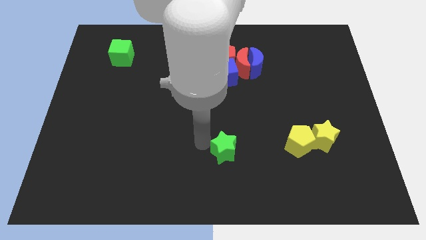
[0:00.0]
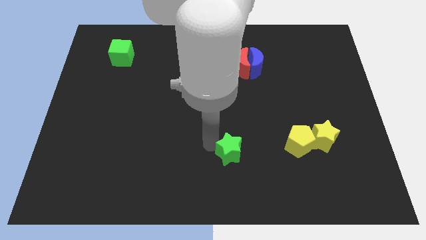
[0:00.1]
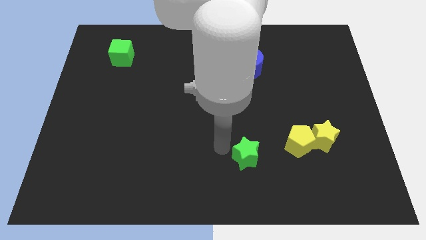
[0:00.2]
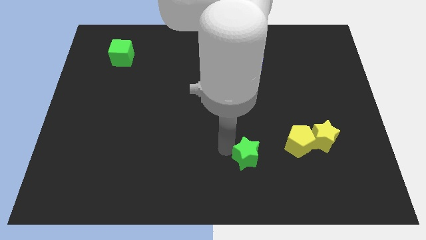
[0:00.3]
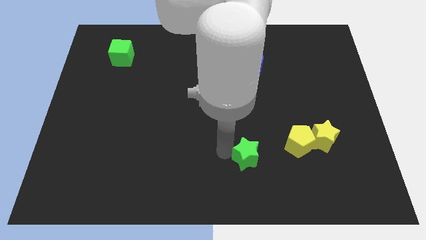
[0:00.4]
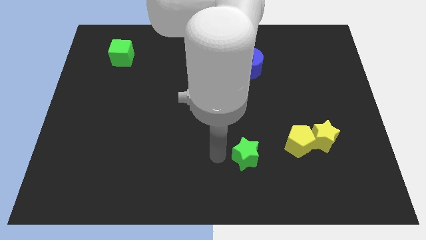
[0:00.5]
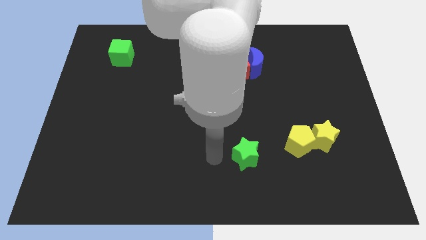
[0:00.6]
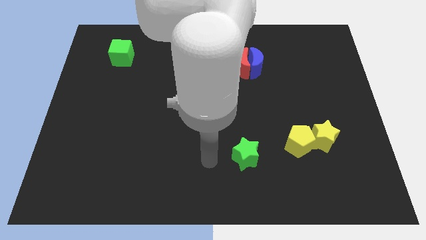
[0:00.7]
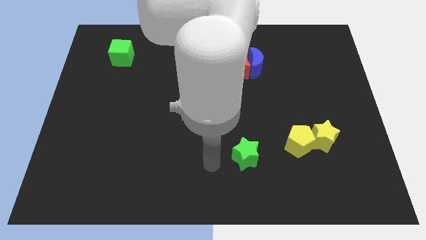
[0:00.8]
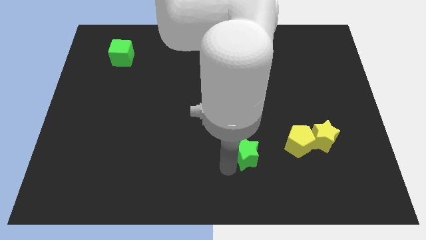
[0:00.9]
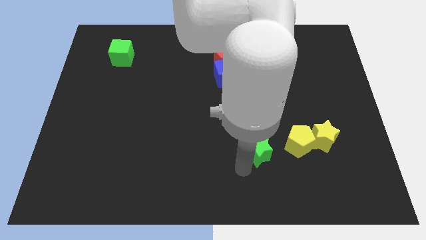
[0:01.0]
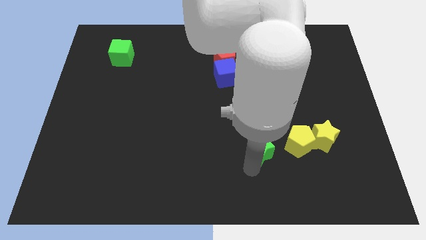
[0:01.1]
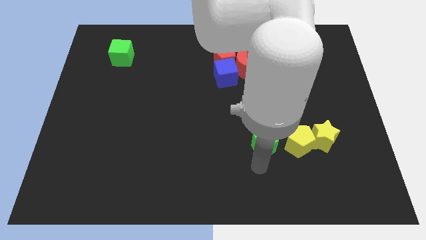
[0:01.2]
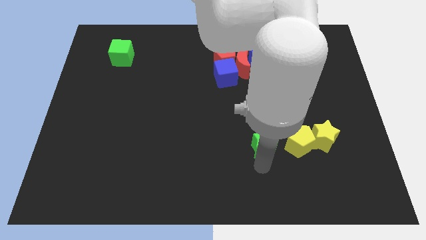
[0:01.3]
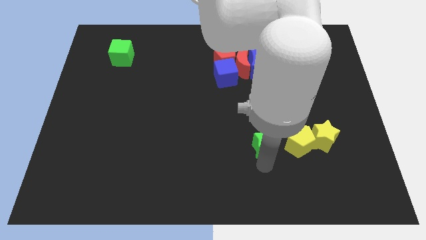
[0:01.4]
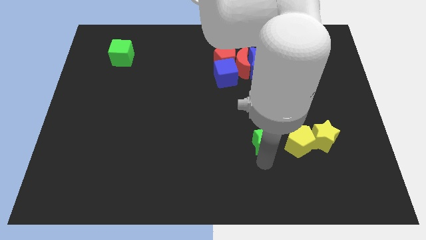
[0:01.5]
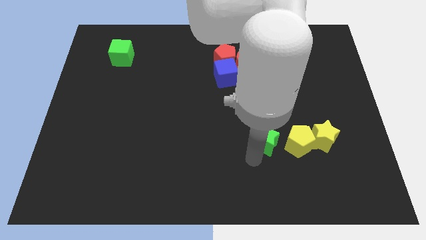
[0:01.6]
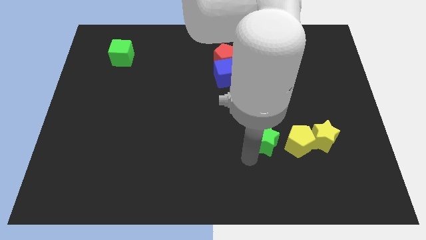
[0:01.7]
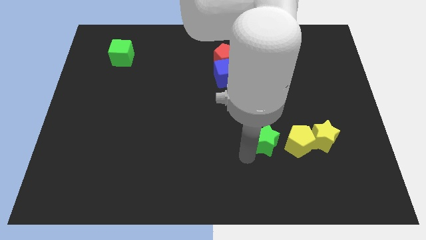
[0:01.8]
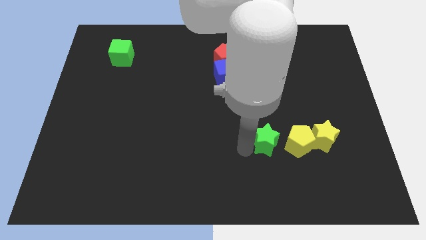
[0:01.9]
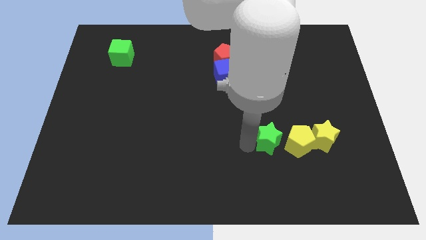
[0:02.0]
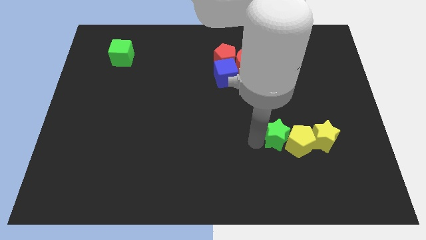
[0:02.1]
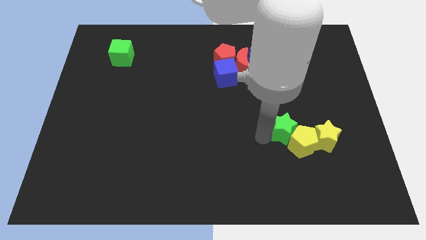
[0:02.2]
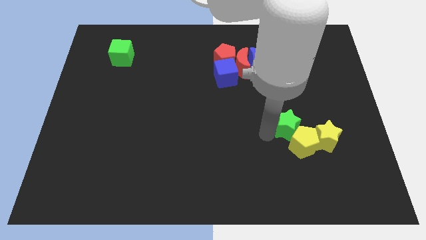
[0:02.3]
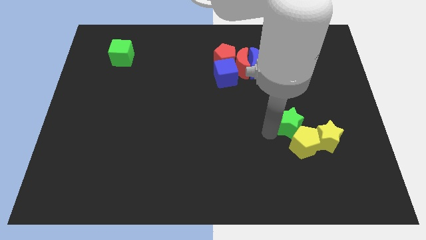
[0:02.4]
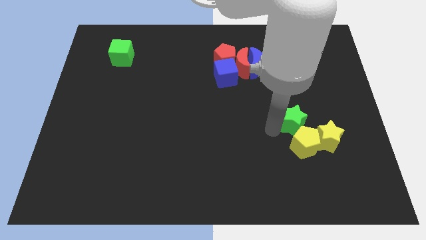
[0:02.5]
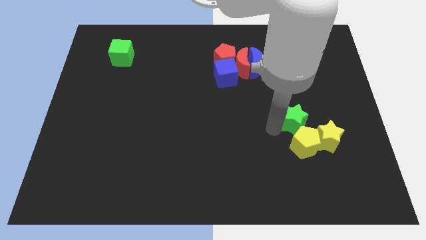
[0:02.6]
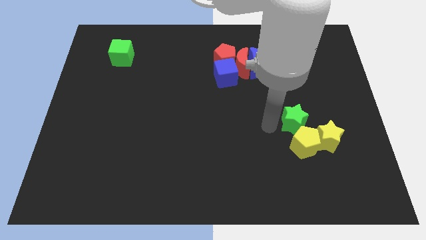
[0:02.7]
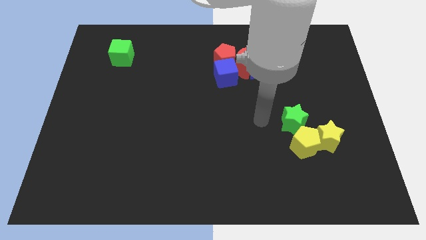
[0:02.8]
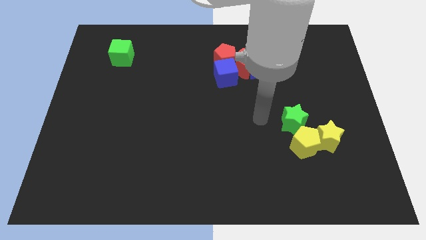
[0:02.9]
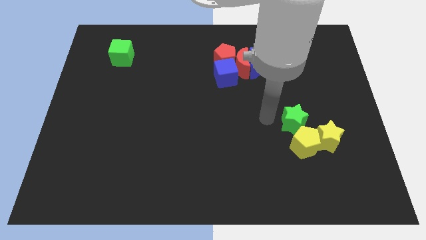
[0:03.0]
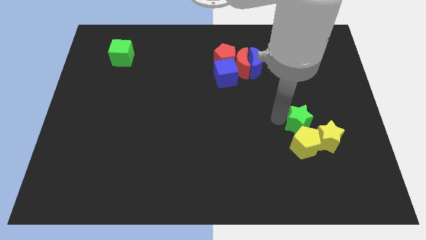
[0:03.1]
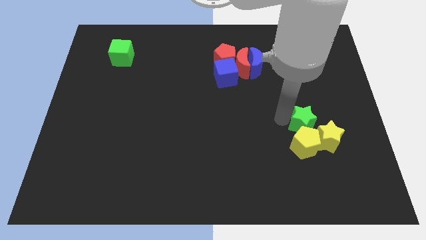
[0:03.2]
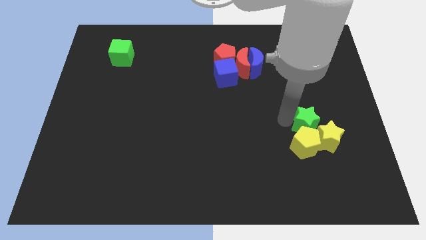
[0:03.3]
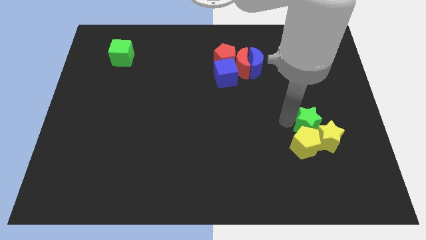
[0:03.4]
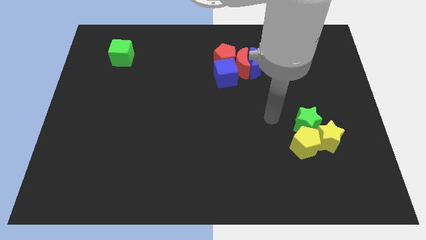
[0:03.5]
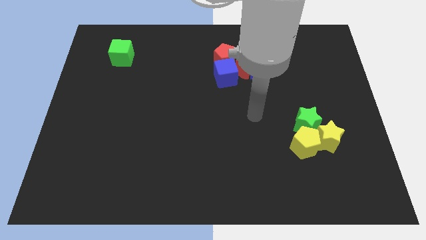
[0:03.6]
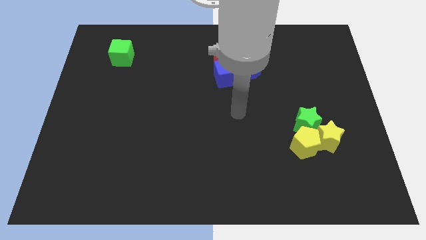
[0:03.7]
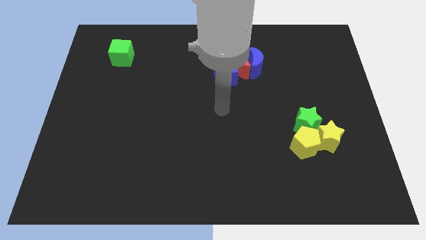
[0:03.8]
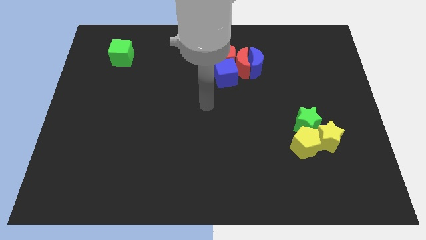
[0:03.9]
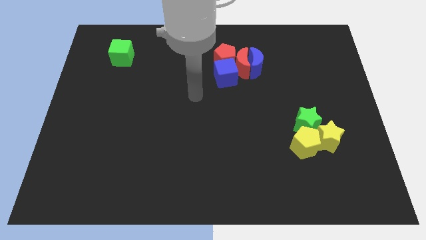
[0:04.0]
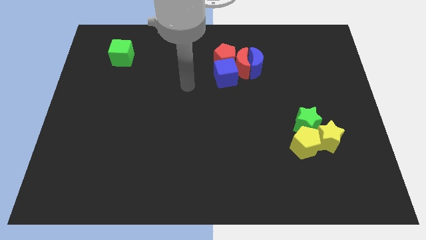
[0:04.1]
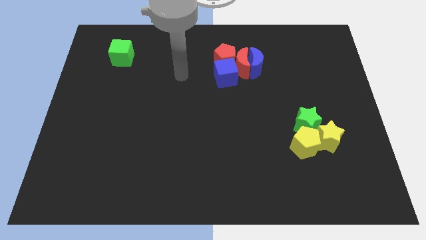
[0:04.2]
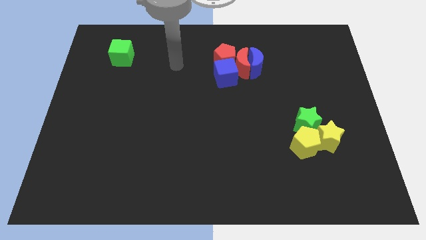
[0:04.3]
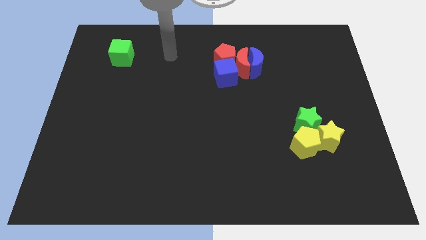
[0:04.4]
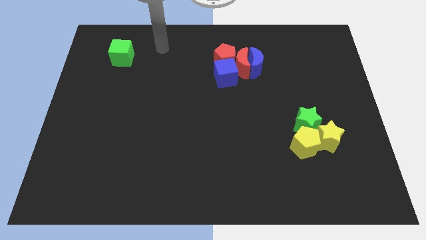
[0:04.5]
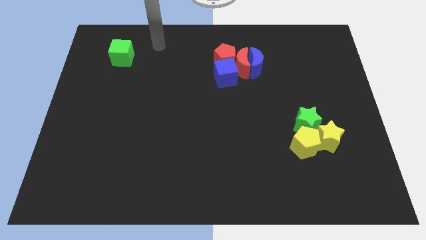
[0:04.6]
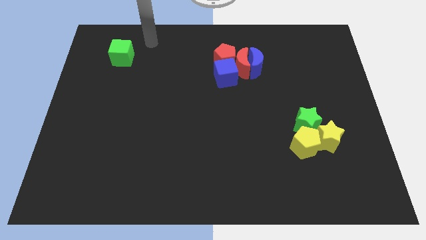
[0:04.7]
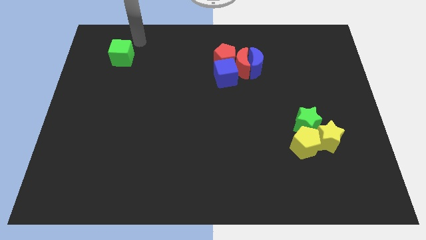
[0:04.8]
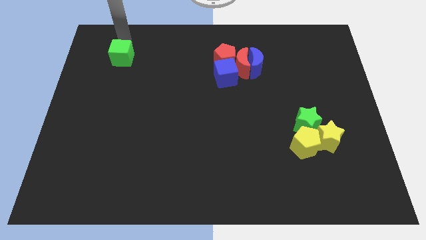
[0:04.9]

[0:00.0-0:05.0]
push the green star above the yellow blocks

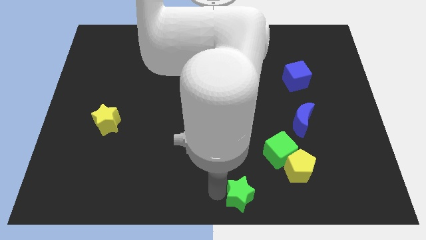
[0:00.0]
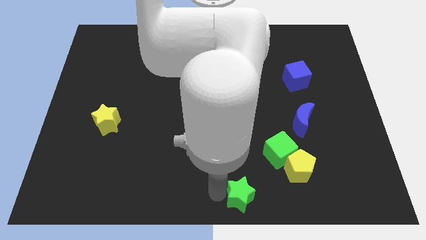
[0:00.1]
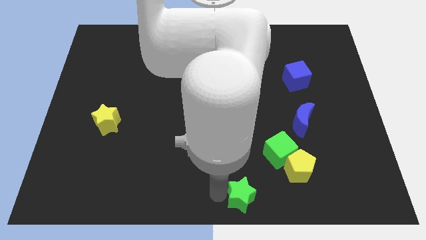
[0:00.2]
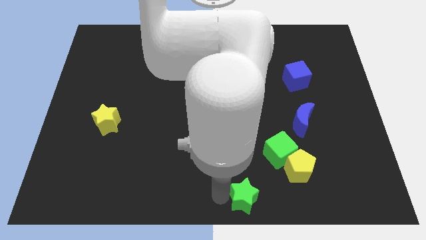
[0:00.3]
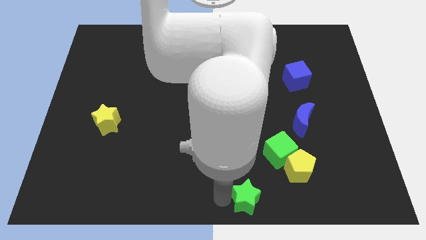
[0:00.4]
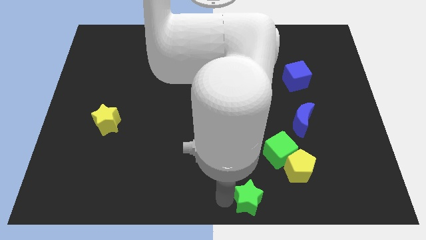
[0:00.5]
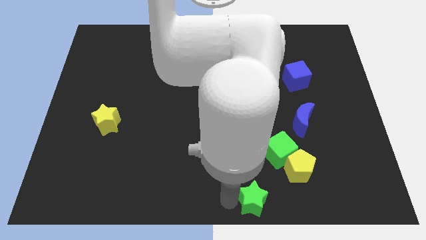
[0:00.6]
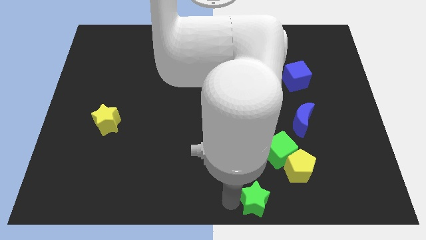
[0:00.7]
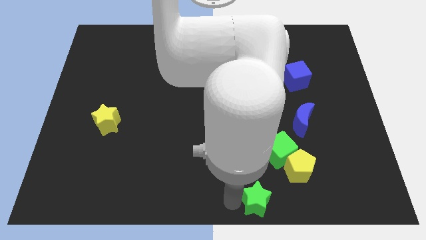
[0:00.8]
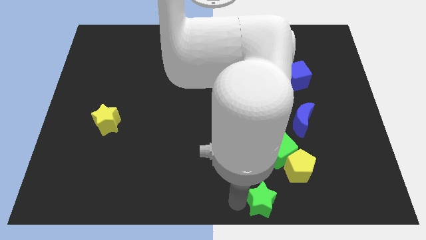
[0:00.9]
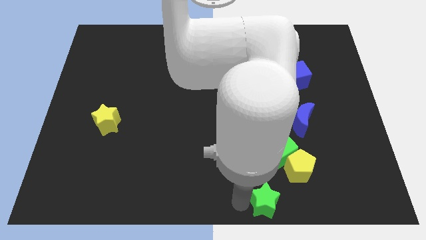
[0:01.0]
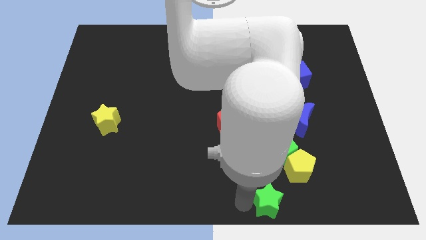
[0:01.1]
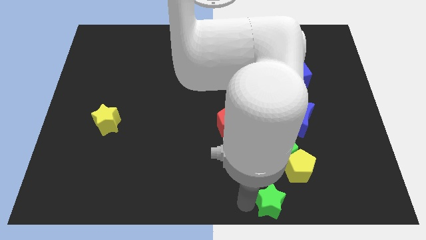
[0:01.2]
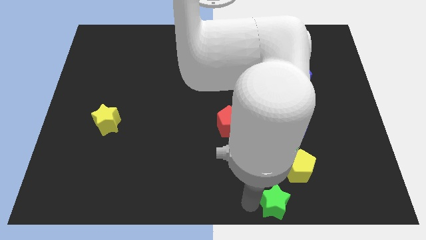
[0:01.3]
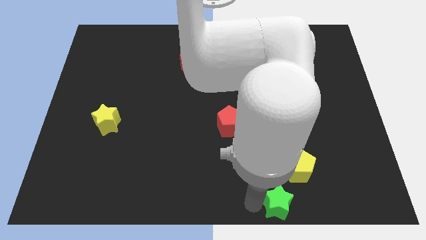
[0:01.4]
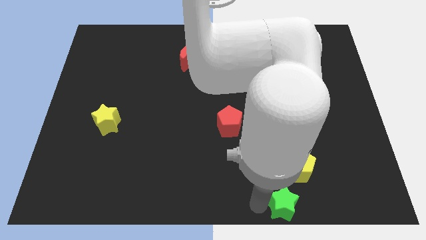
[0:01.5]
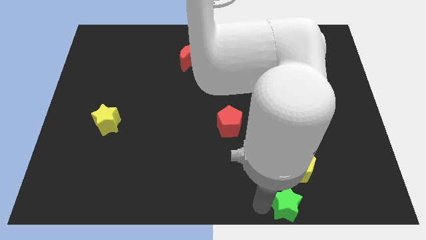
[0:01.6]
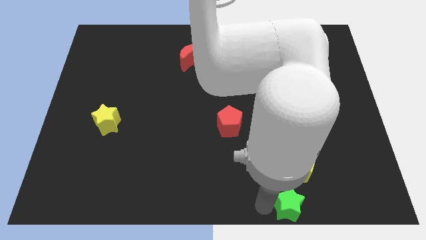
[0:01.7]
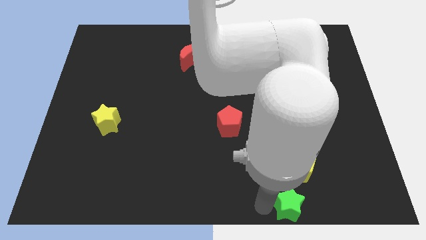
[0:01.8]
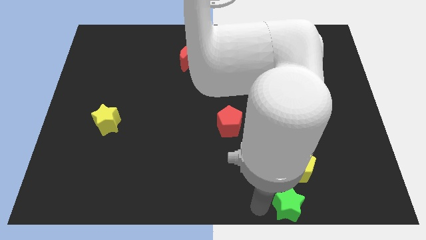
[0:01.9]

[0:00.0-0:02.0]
move the green star below to the yellow pentagon

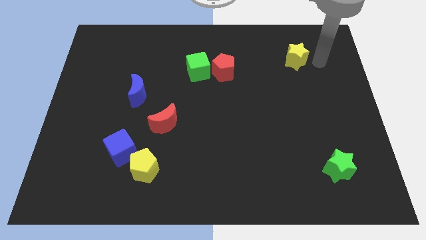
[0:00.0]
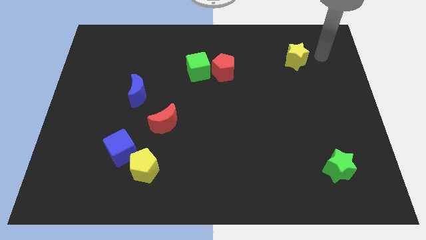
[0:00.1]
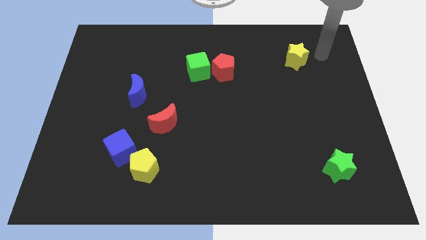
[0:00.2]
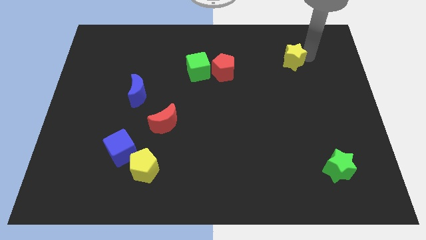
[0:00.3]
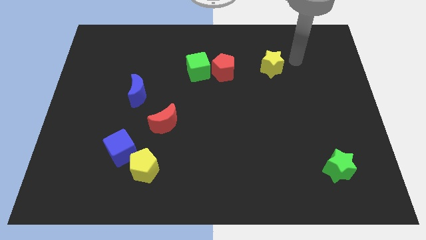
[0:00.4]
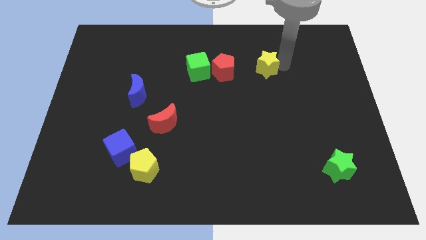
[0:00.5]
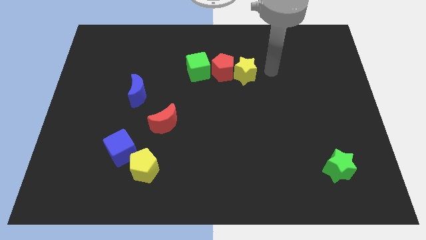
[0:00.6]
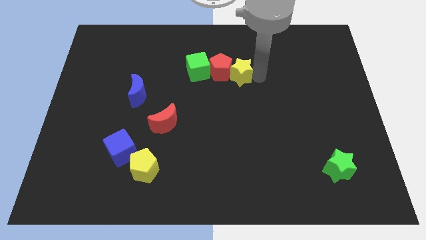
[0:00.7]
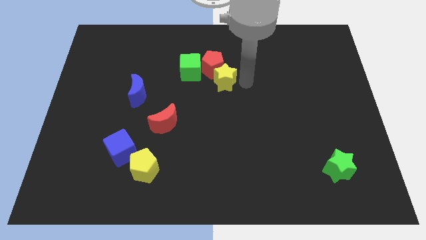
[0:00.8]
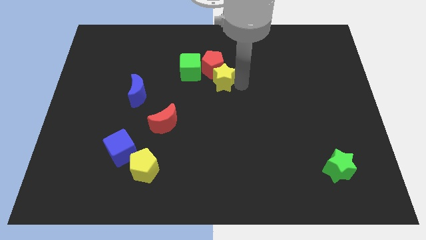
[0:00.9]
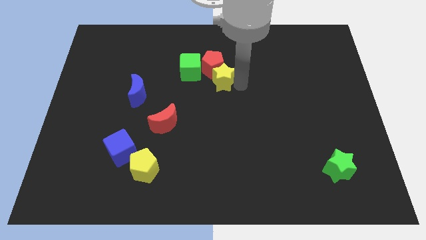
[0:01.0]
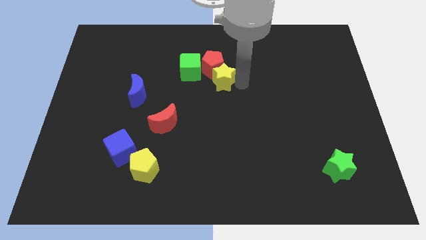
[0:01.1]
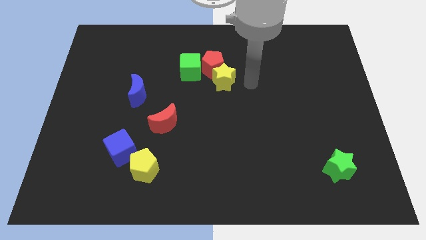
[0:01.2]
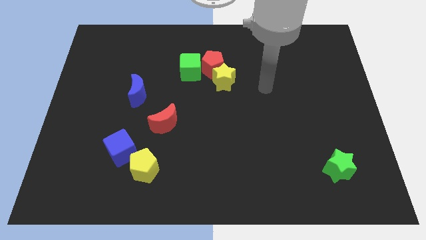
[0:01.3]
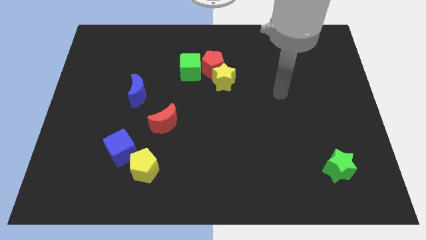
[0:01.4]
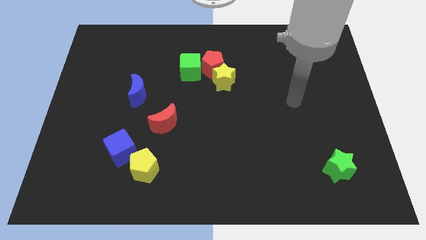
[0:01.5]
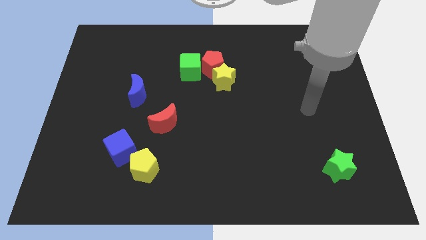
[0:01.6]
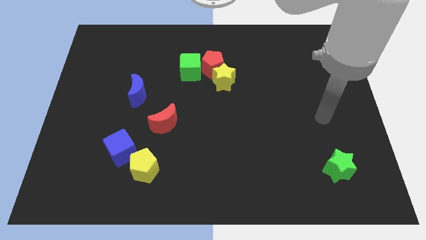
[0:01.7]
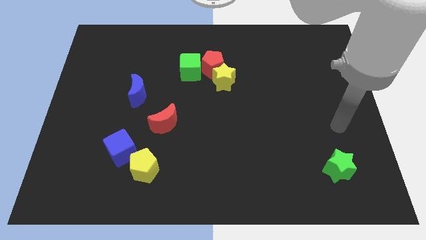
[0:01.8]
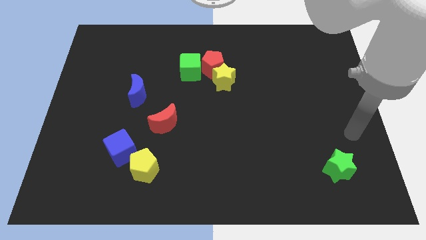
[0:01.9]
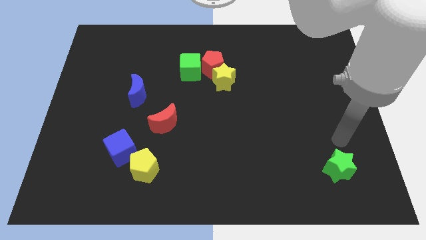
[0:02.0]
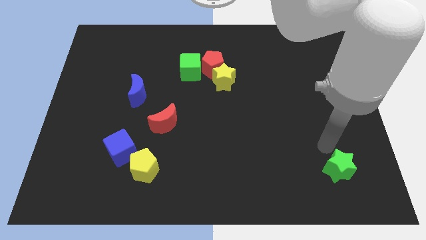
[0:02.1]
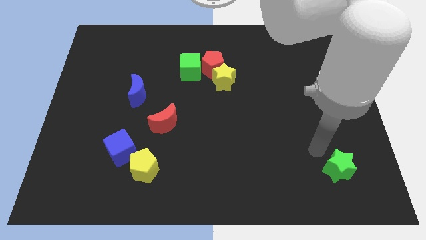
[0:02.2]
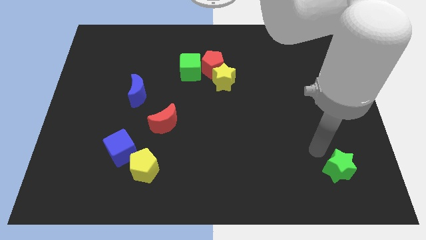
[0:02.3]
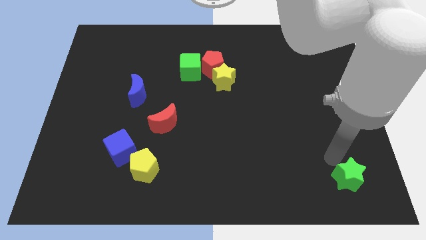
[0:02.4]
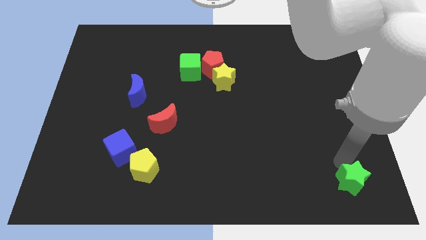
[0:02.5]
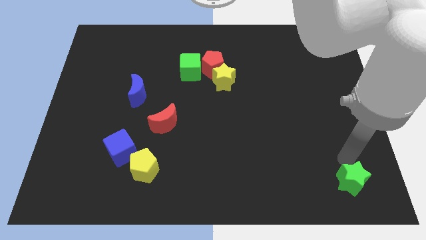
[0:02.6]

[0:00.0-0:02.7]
move the green star slightly towards the bottom side of the board
